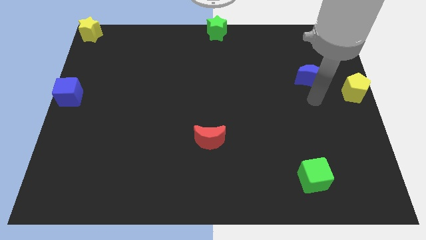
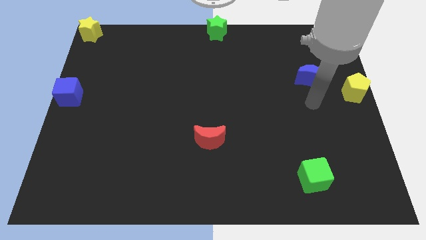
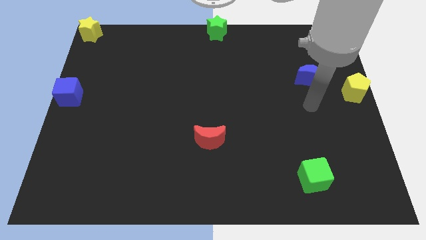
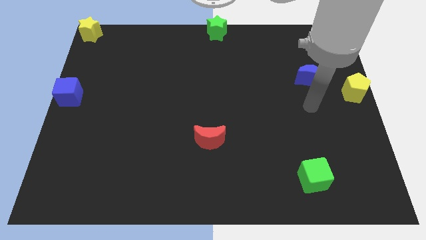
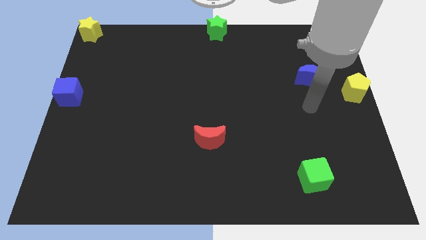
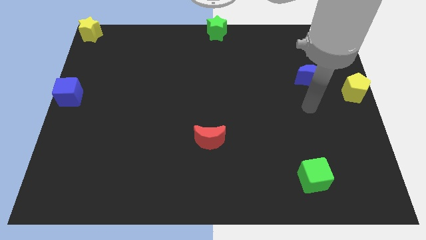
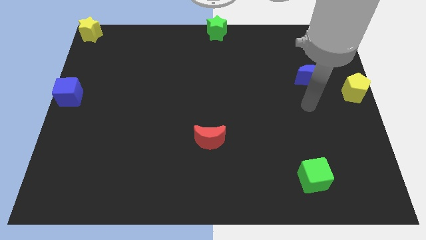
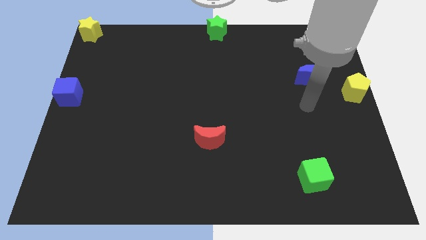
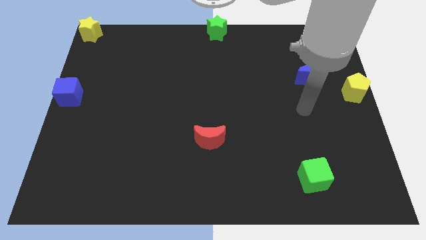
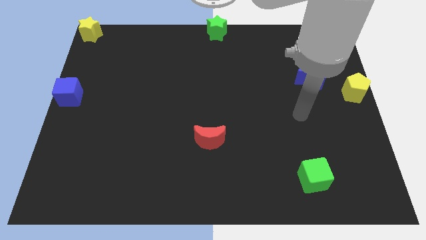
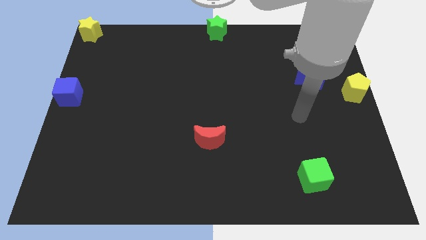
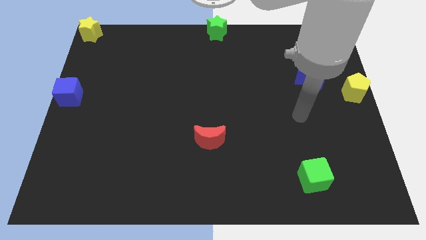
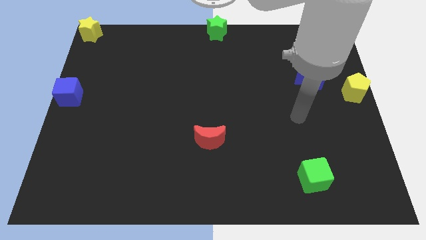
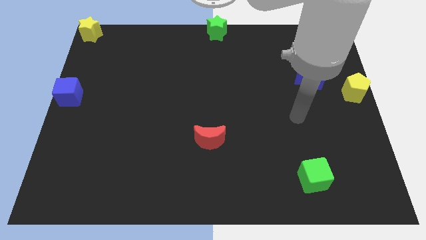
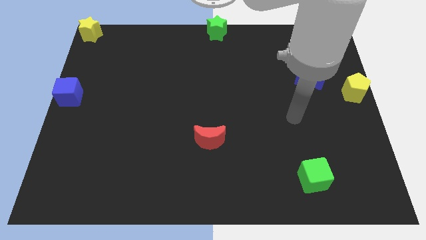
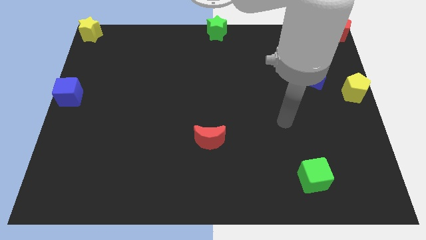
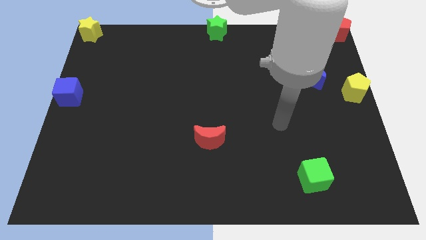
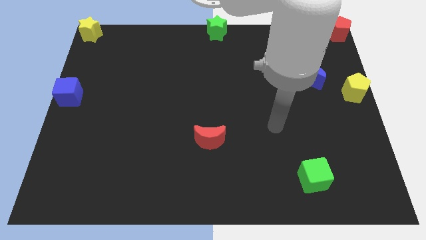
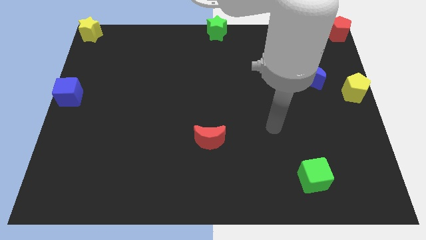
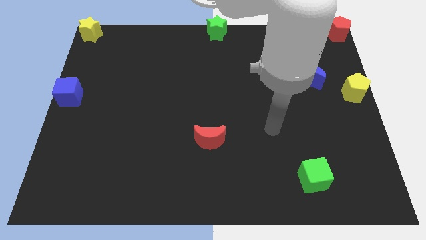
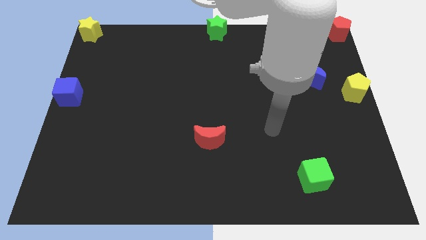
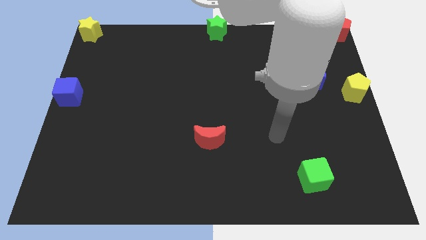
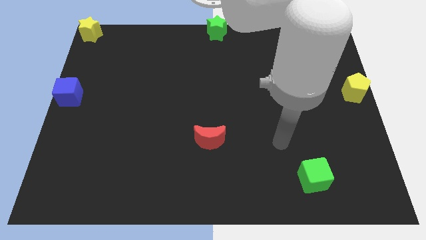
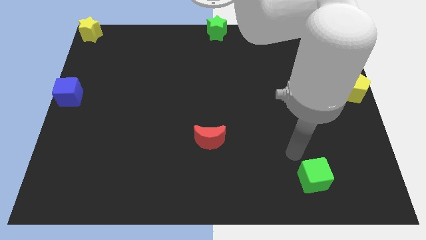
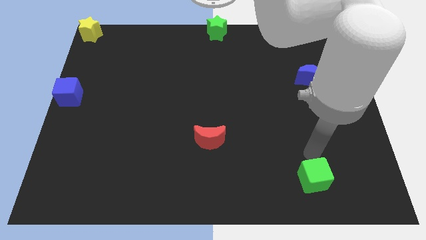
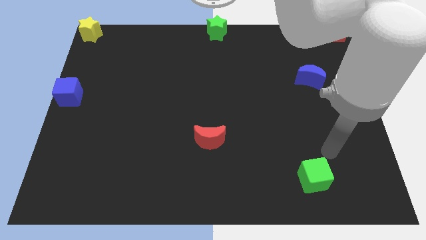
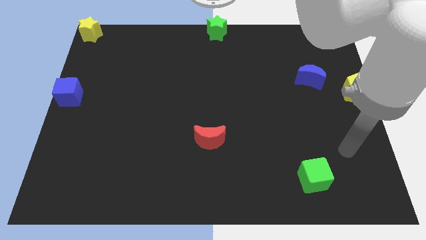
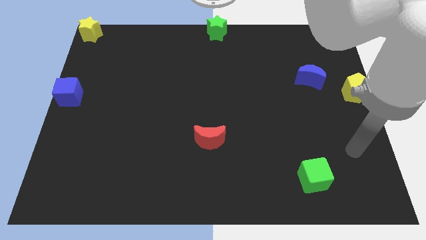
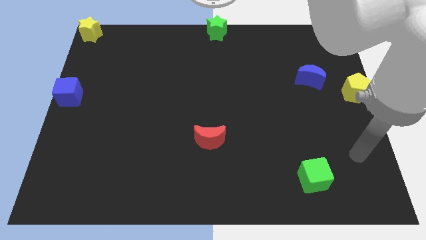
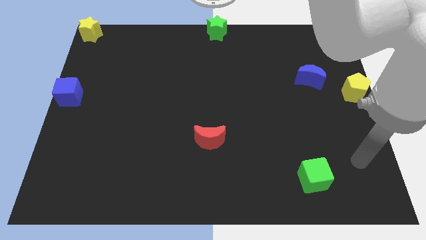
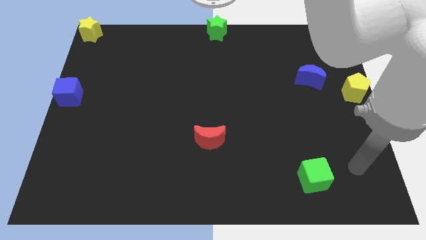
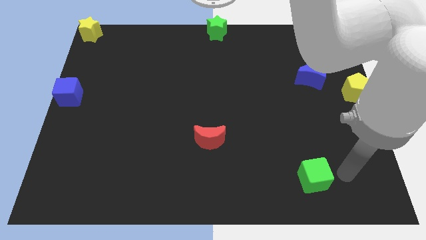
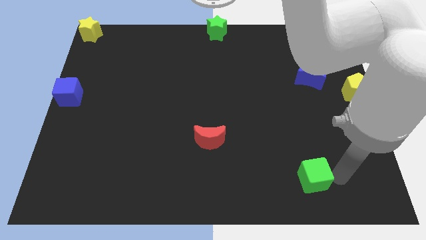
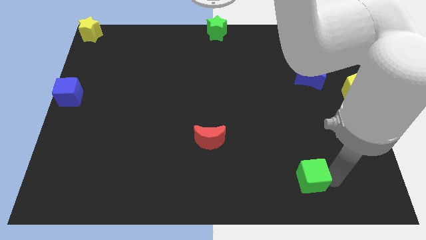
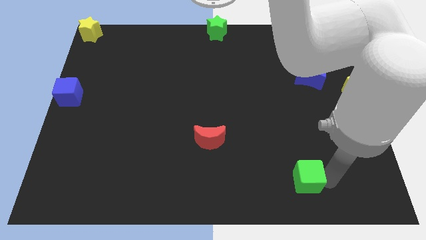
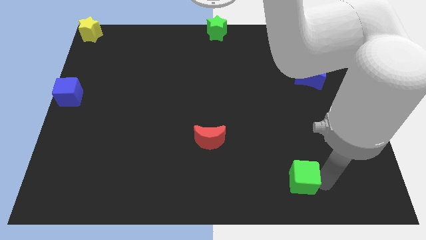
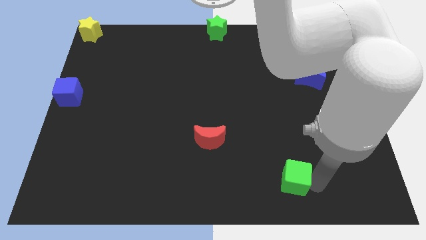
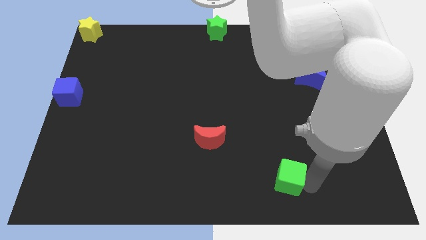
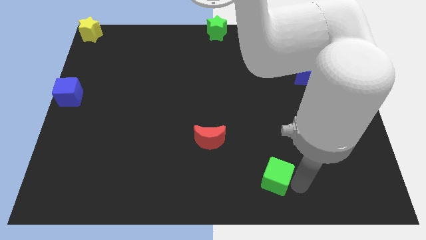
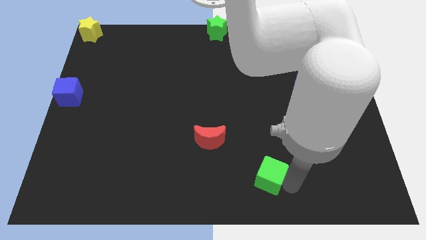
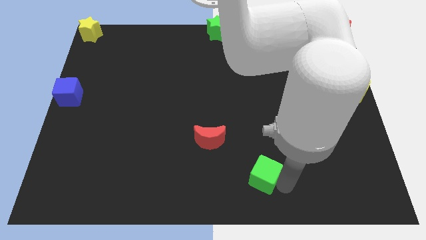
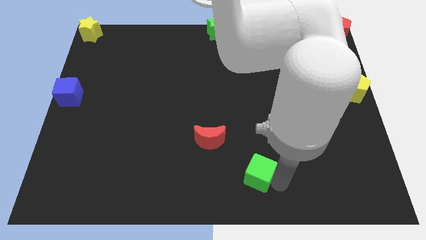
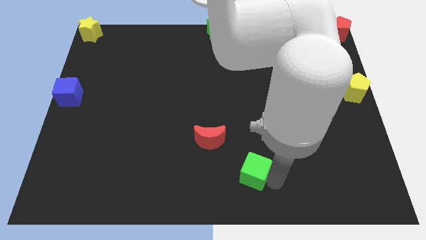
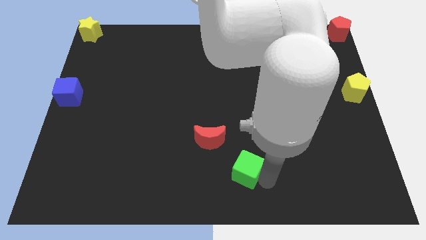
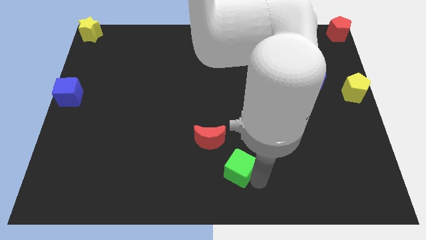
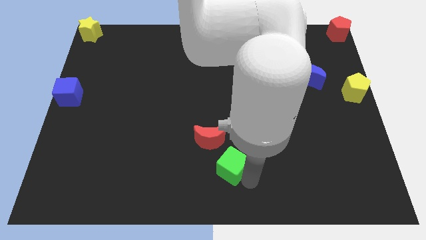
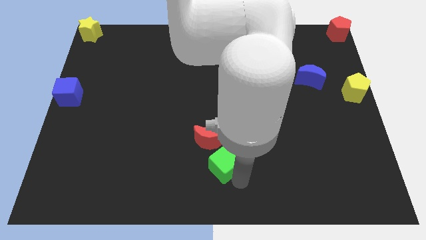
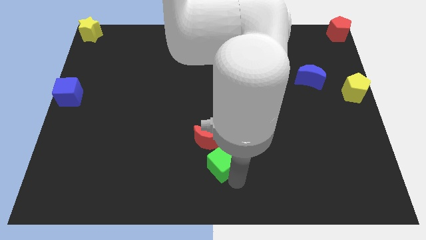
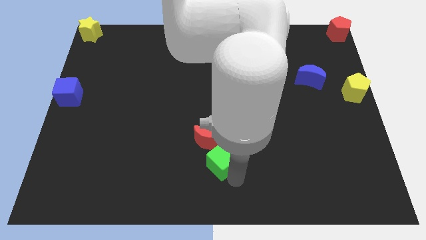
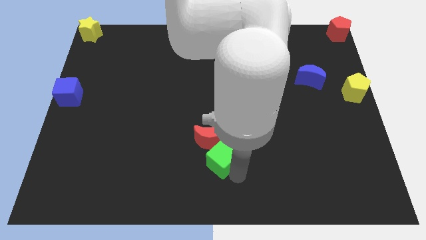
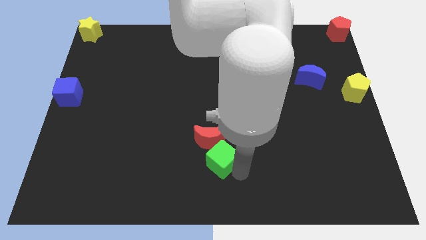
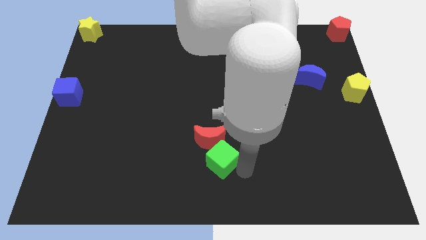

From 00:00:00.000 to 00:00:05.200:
place green cube below the red moon

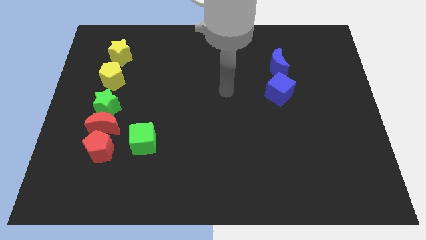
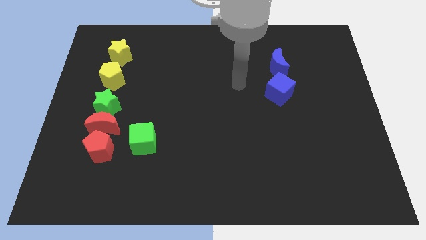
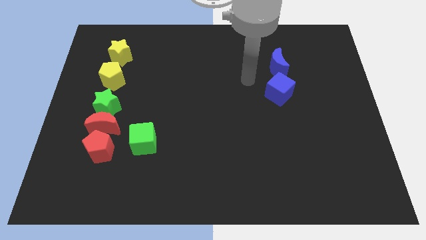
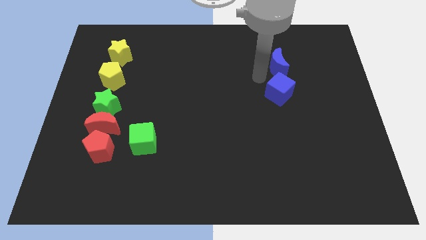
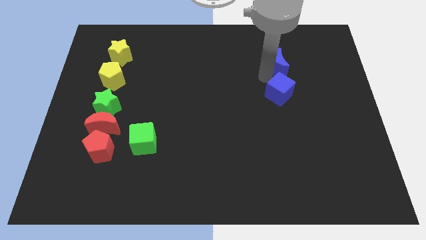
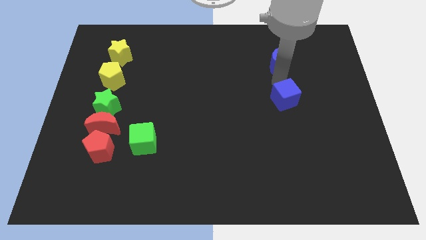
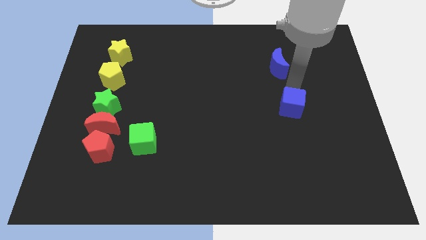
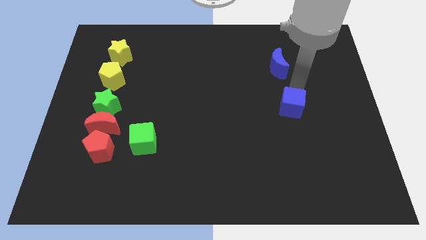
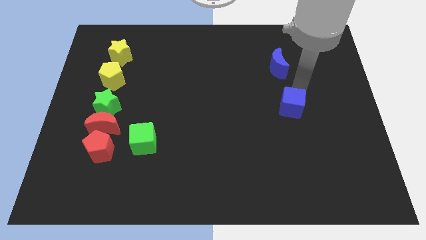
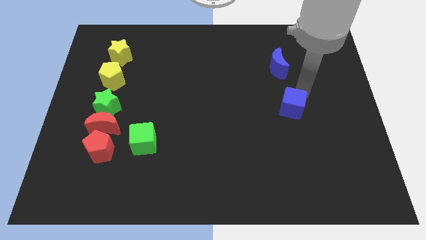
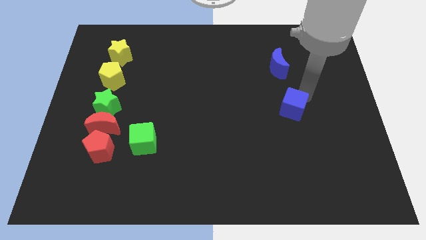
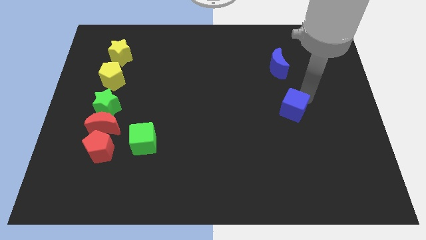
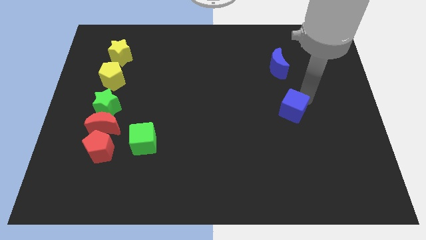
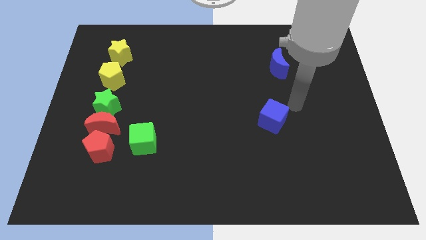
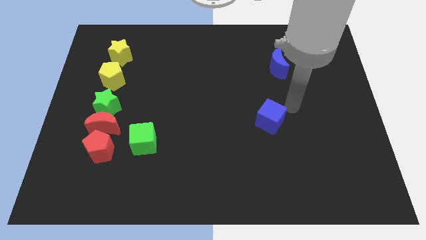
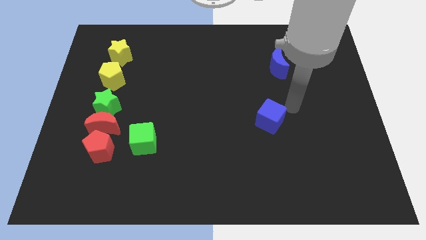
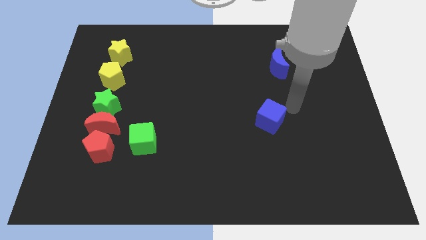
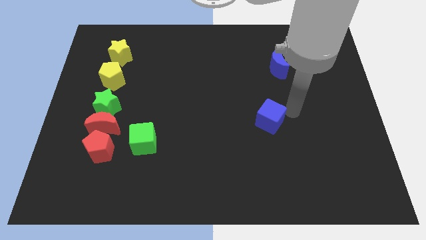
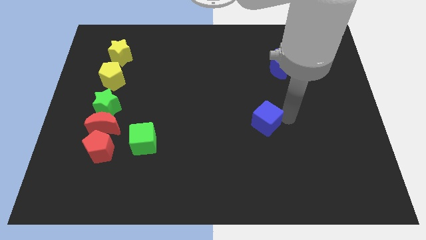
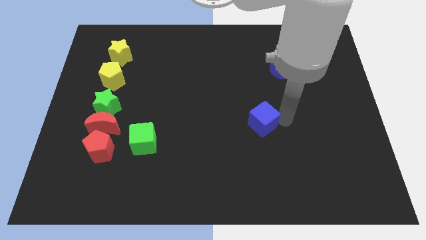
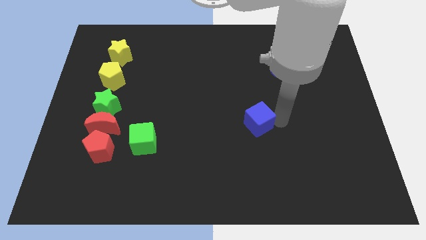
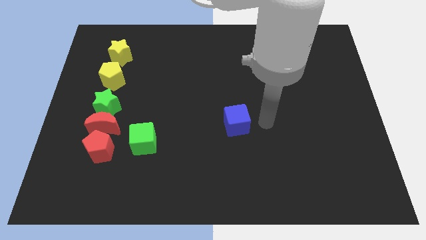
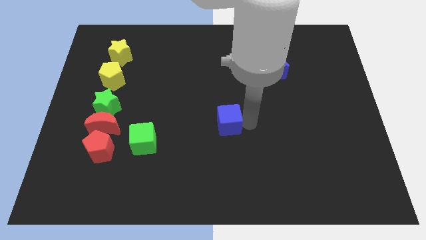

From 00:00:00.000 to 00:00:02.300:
separate the blue cube from the blue moon

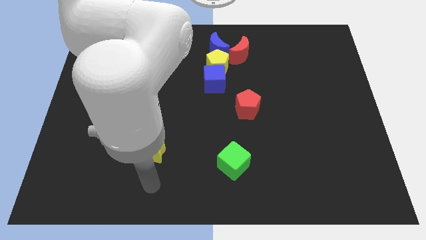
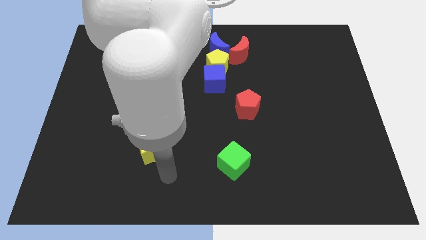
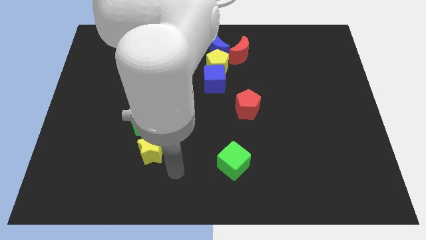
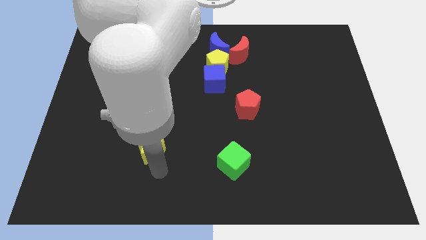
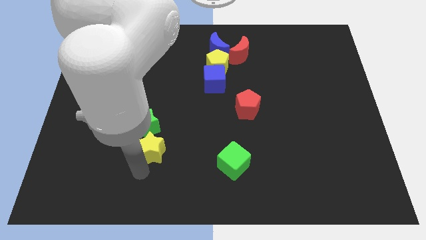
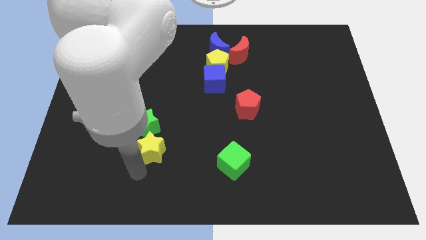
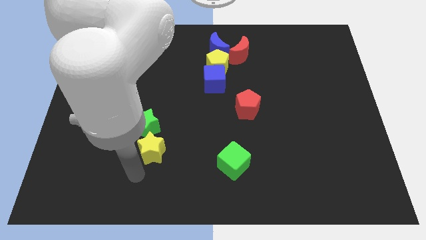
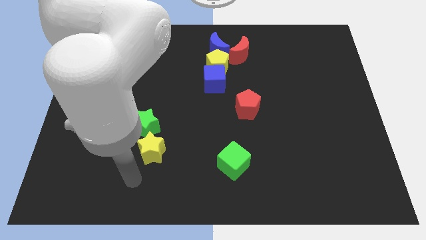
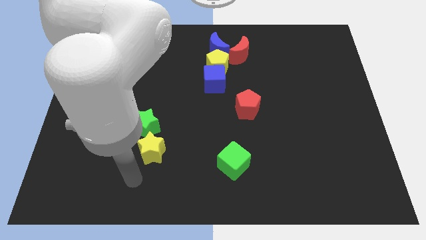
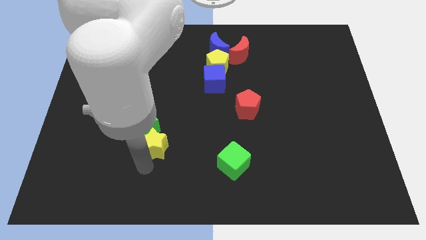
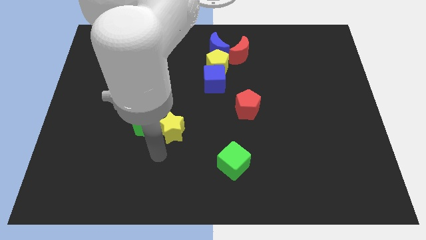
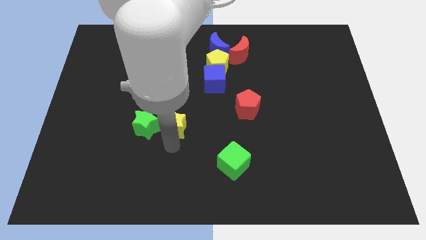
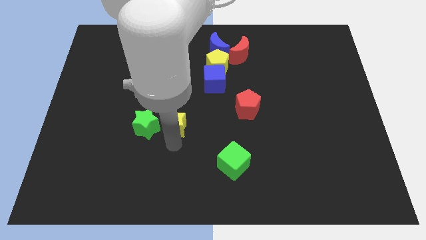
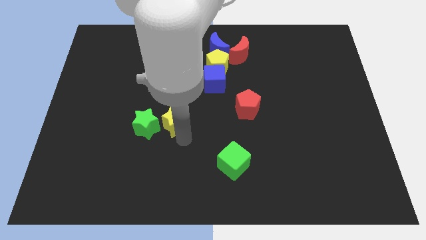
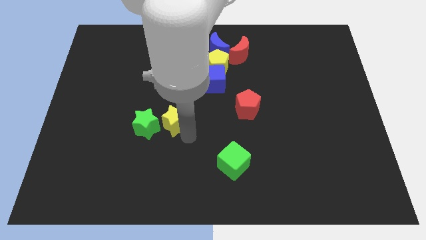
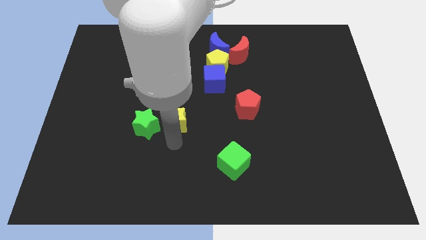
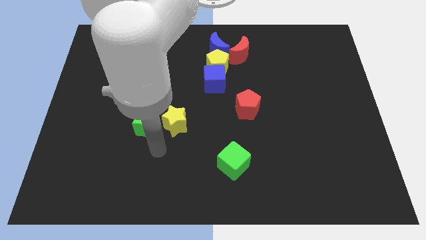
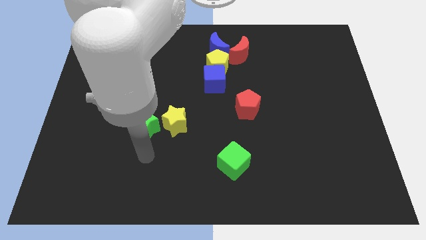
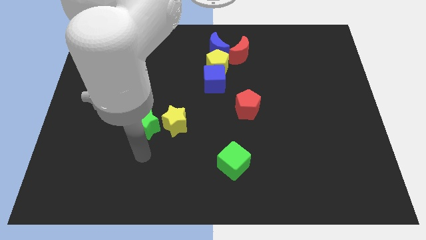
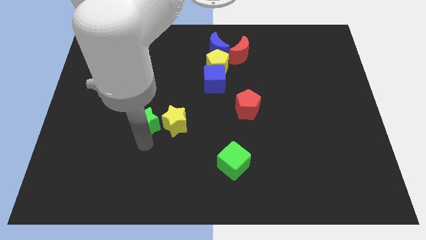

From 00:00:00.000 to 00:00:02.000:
push the yellow star to the right of green star
